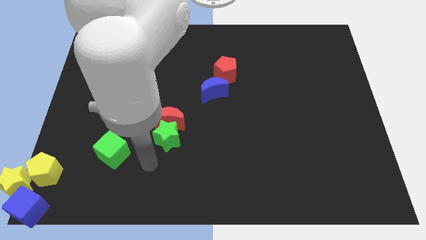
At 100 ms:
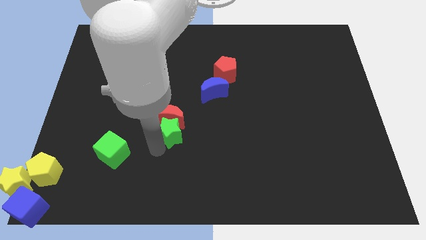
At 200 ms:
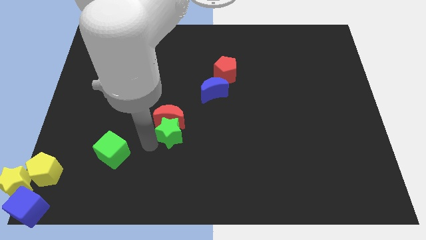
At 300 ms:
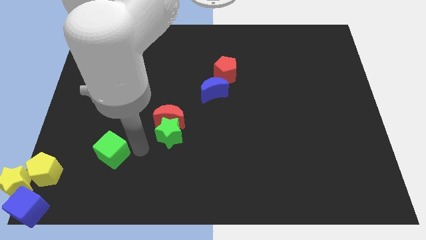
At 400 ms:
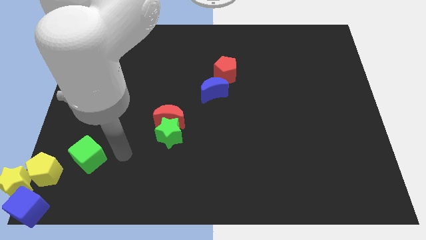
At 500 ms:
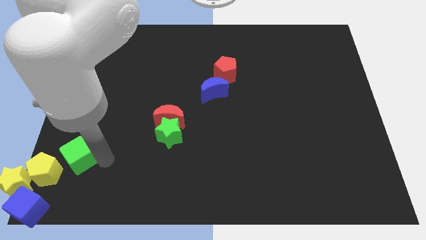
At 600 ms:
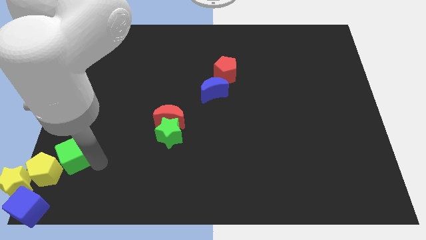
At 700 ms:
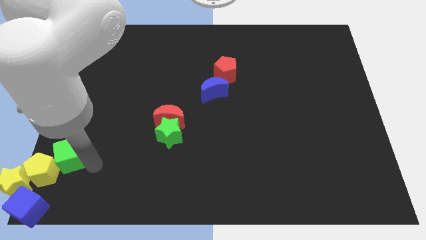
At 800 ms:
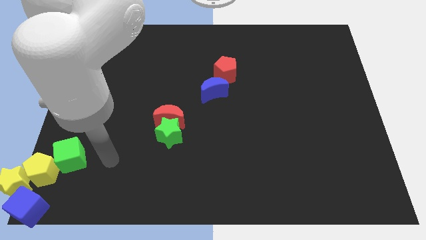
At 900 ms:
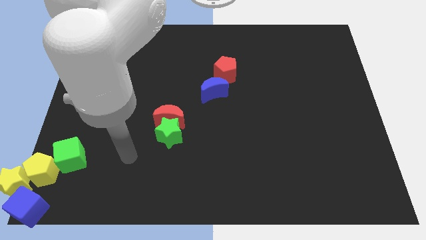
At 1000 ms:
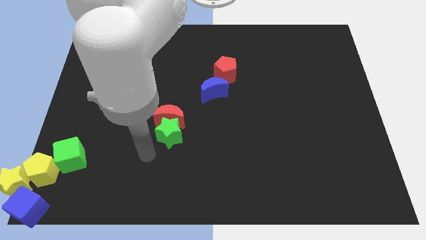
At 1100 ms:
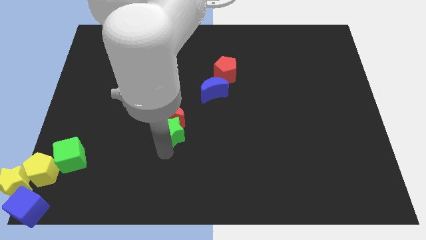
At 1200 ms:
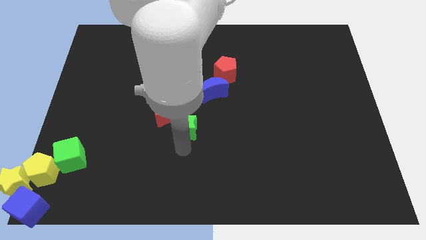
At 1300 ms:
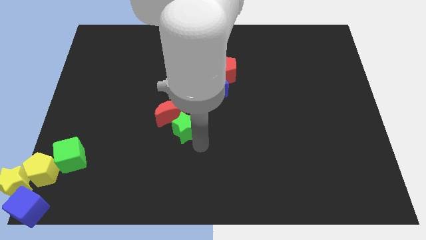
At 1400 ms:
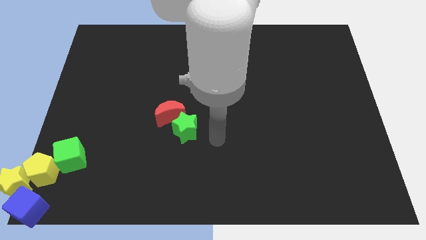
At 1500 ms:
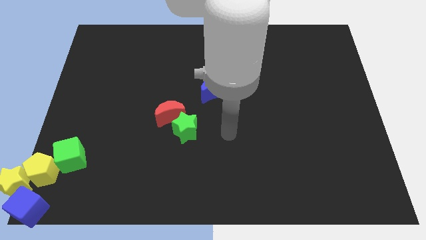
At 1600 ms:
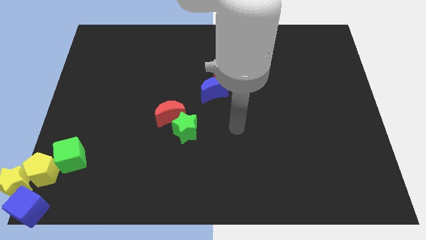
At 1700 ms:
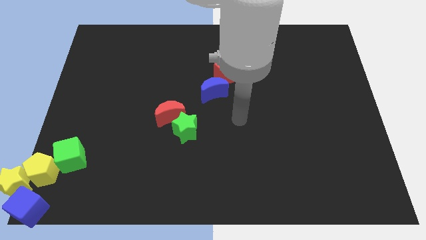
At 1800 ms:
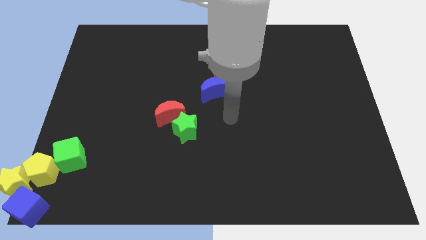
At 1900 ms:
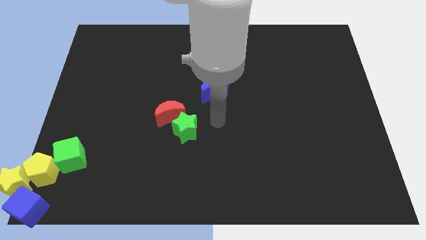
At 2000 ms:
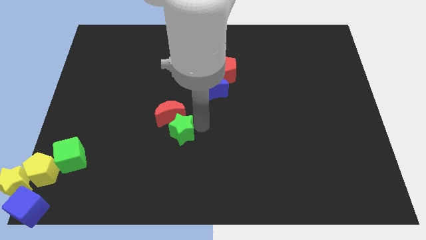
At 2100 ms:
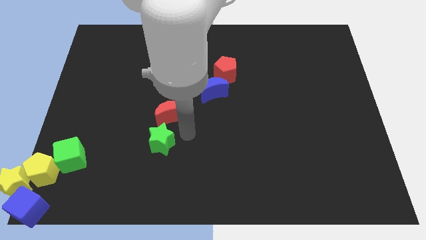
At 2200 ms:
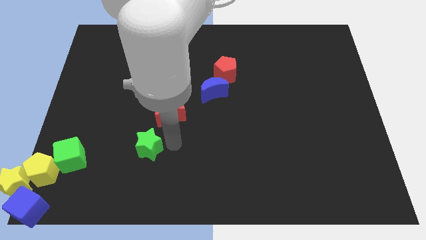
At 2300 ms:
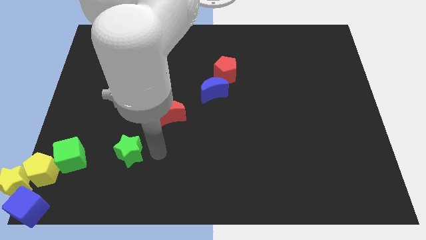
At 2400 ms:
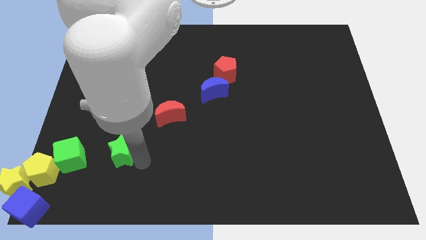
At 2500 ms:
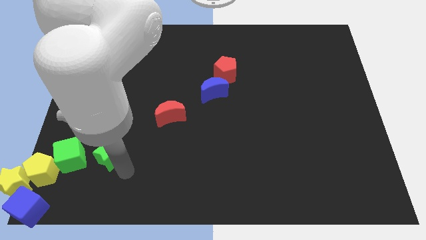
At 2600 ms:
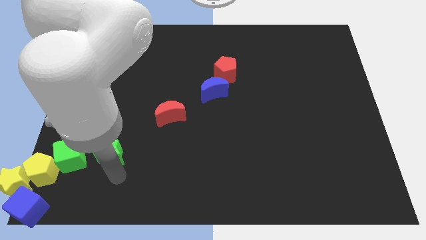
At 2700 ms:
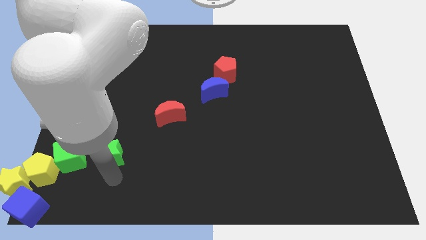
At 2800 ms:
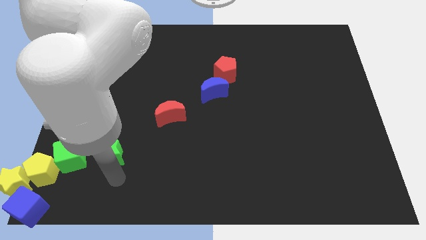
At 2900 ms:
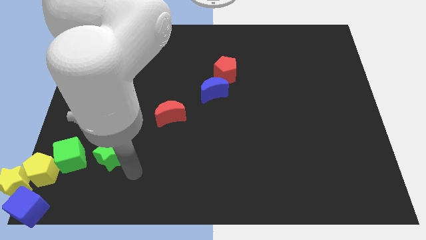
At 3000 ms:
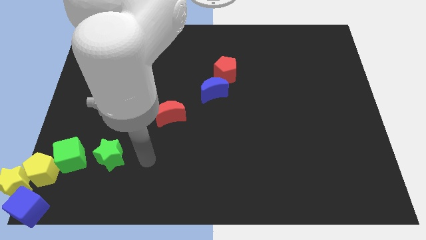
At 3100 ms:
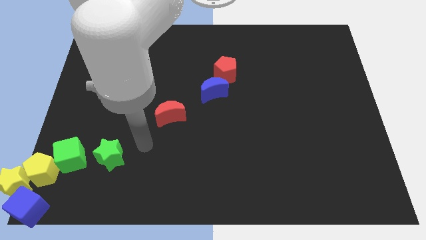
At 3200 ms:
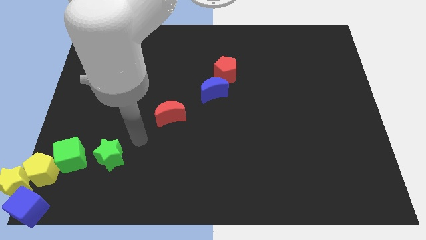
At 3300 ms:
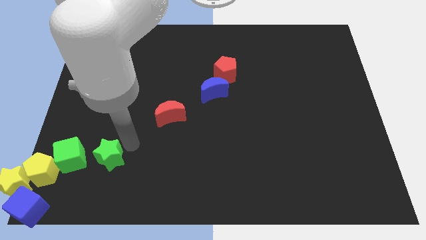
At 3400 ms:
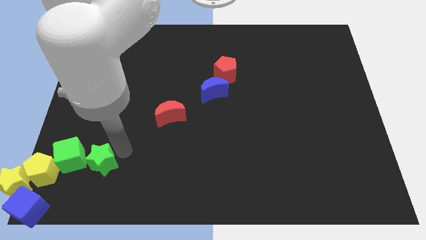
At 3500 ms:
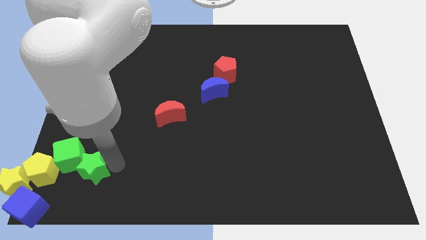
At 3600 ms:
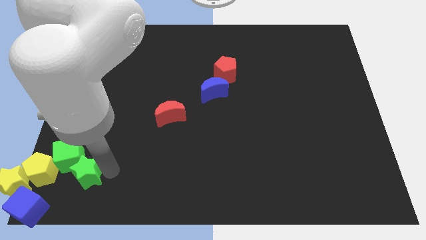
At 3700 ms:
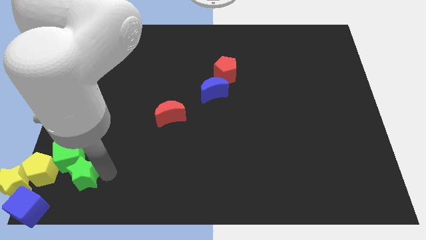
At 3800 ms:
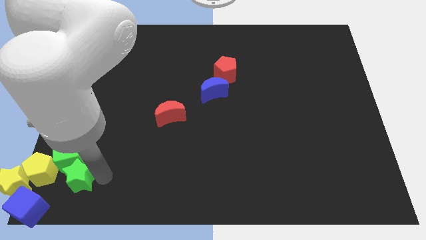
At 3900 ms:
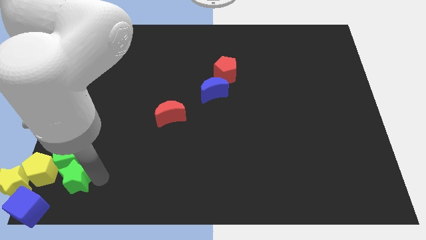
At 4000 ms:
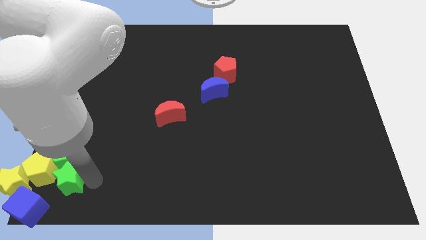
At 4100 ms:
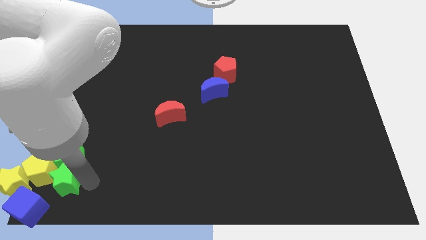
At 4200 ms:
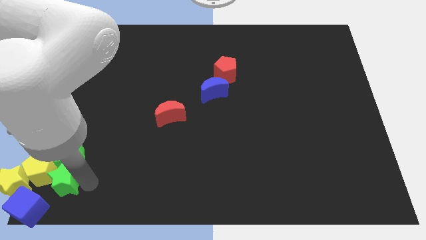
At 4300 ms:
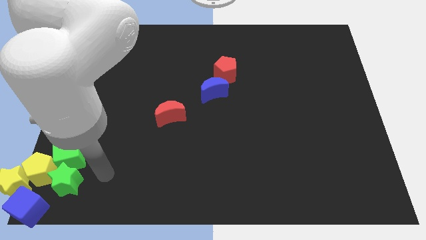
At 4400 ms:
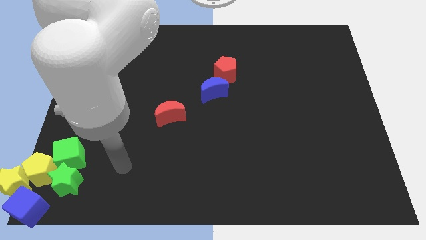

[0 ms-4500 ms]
move the green cube and green star into the yellow pentagon

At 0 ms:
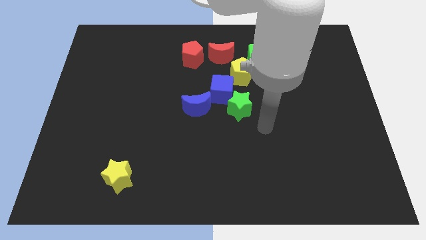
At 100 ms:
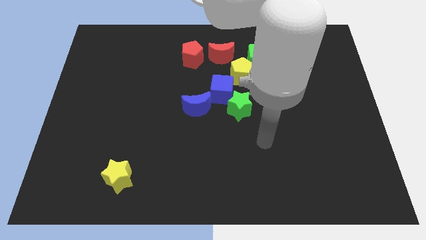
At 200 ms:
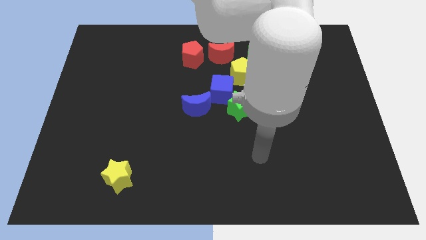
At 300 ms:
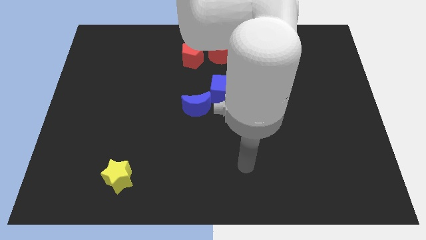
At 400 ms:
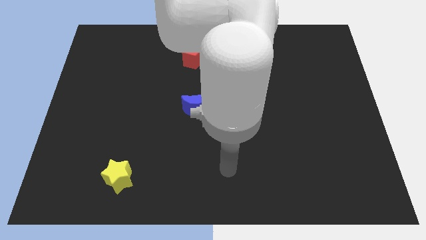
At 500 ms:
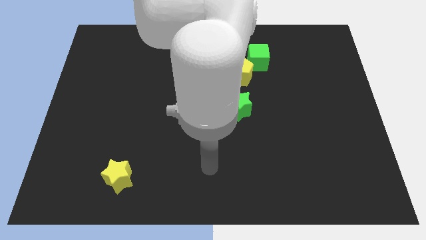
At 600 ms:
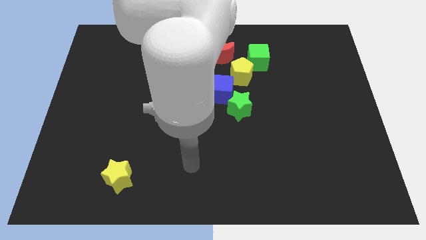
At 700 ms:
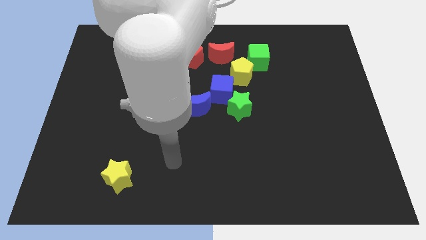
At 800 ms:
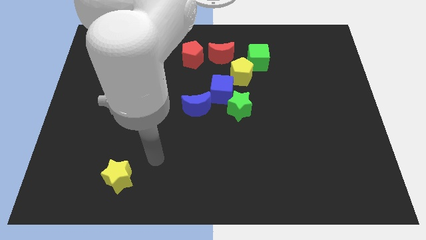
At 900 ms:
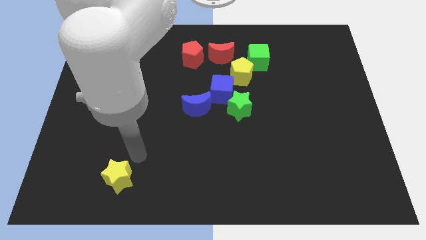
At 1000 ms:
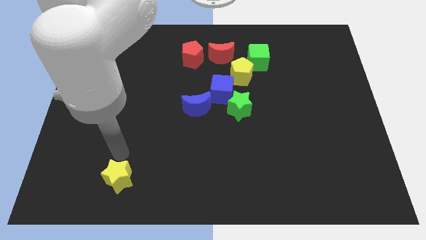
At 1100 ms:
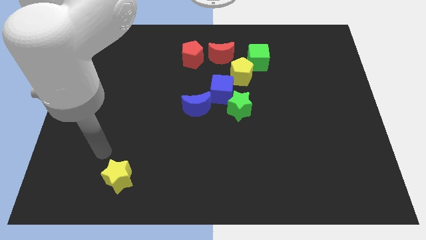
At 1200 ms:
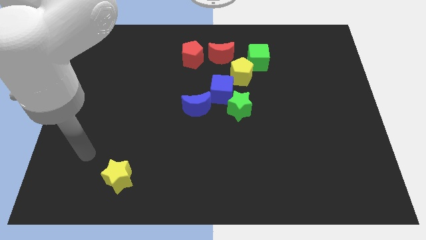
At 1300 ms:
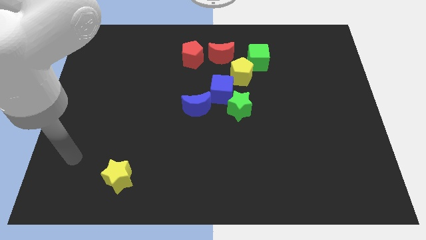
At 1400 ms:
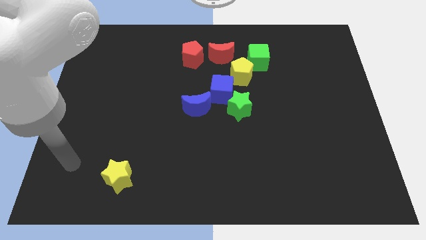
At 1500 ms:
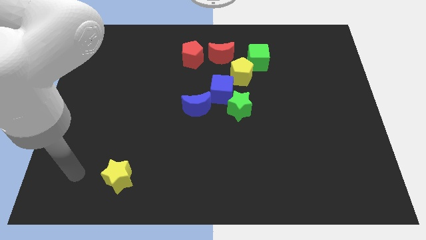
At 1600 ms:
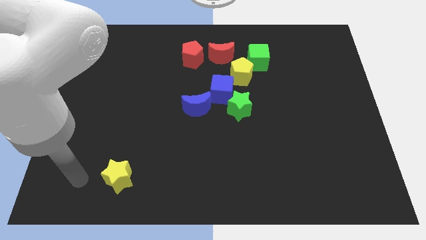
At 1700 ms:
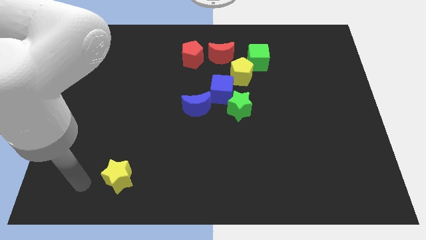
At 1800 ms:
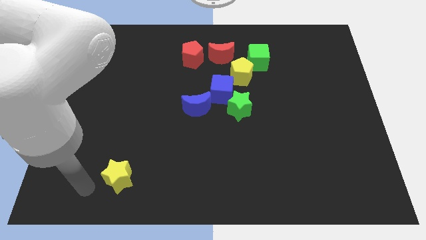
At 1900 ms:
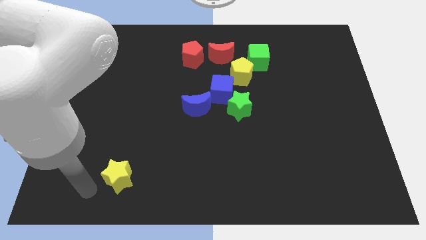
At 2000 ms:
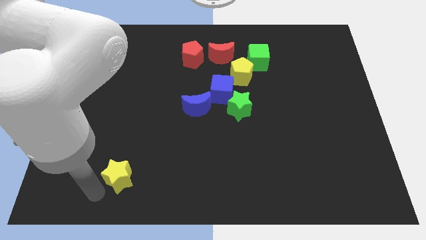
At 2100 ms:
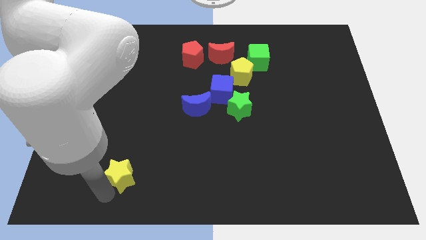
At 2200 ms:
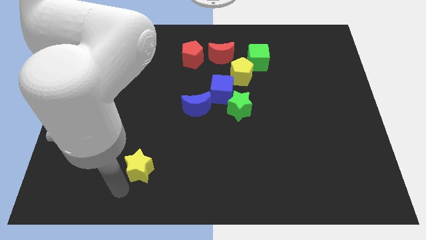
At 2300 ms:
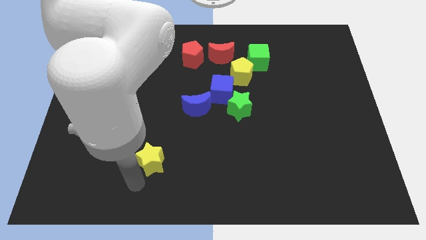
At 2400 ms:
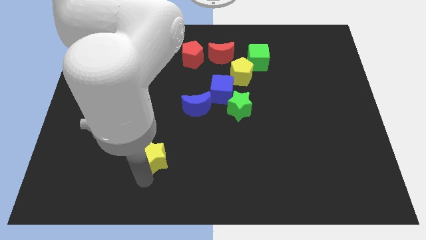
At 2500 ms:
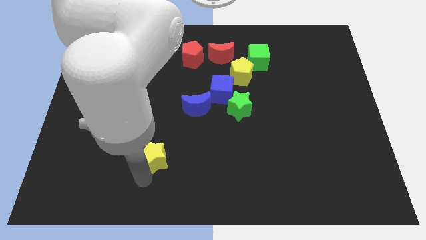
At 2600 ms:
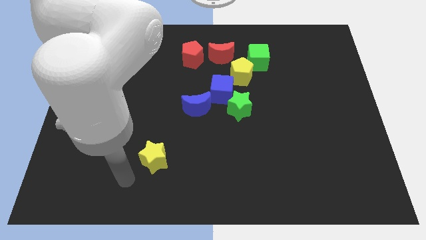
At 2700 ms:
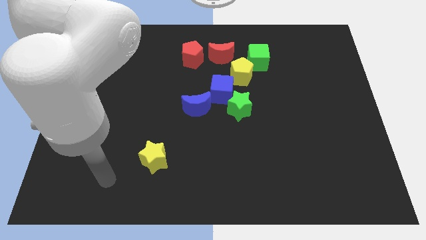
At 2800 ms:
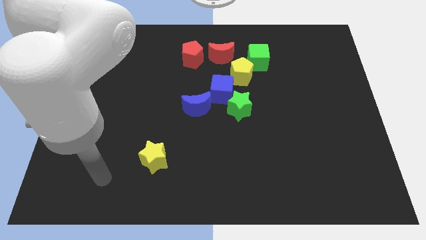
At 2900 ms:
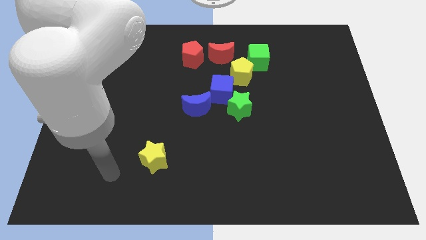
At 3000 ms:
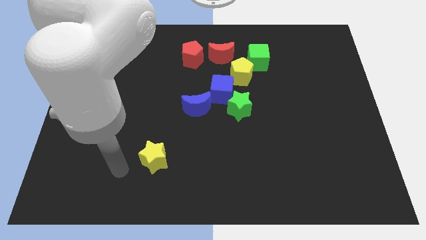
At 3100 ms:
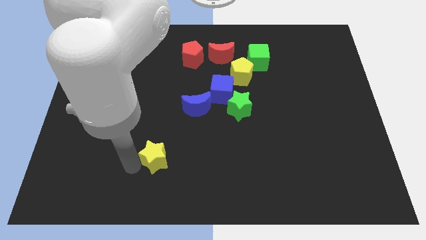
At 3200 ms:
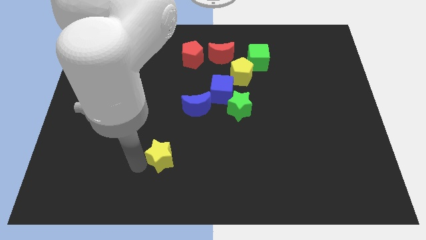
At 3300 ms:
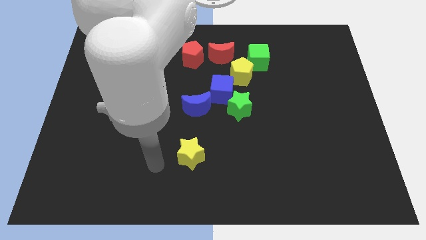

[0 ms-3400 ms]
push the yellow star to the bottom of the blue crescent

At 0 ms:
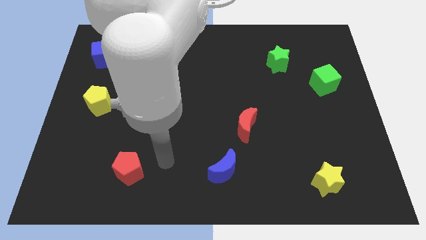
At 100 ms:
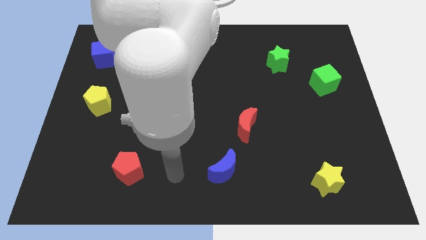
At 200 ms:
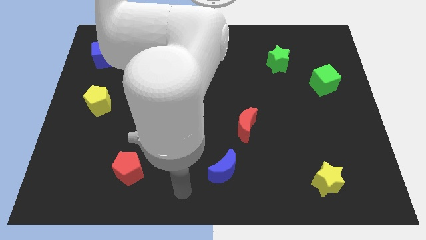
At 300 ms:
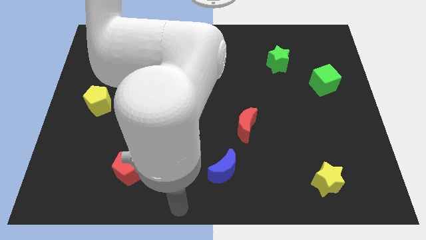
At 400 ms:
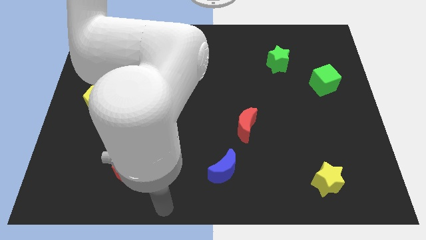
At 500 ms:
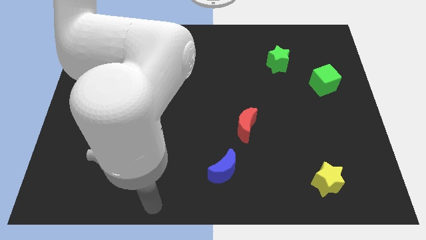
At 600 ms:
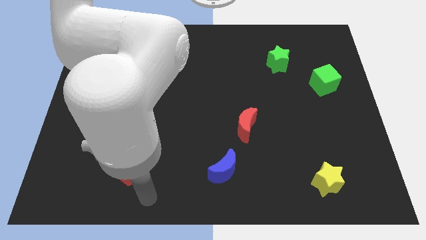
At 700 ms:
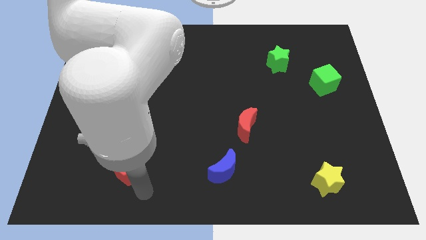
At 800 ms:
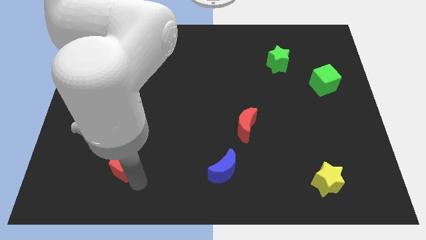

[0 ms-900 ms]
place your arm to the bottom of red pentagon
